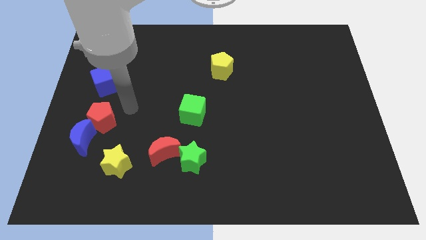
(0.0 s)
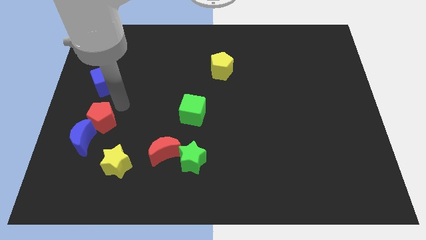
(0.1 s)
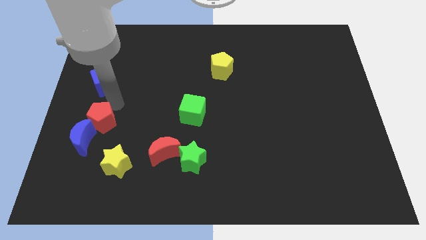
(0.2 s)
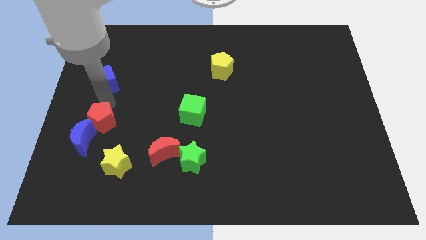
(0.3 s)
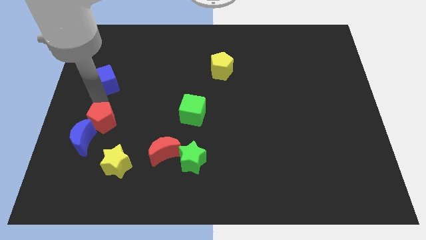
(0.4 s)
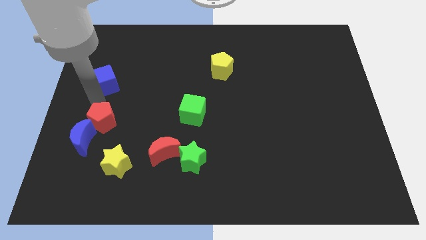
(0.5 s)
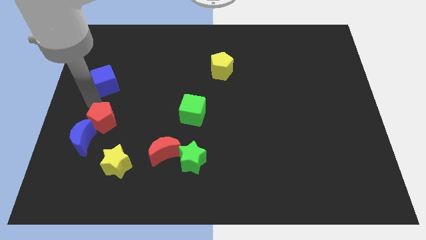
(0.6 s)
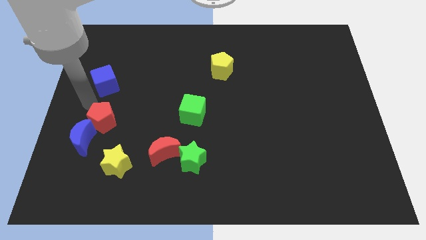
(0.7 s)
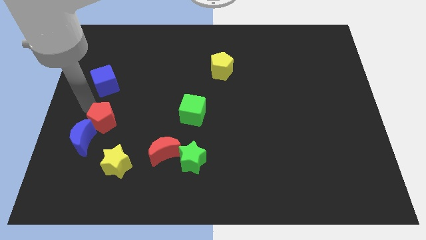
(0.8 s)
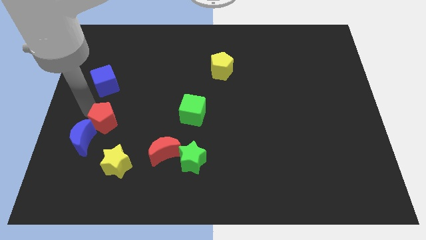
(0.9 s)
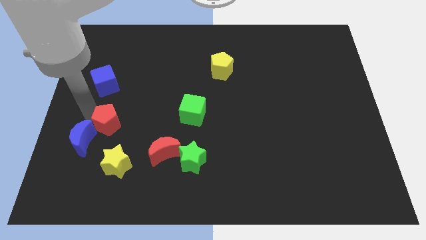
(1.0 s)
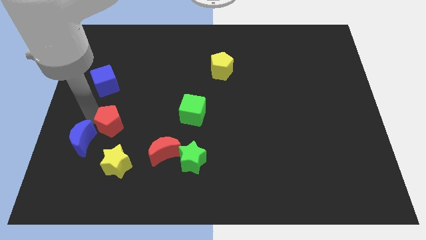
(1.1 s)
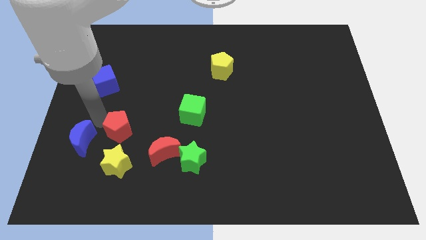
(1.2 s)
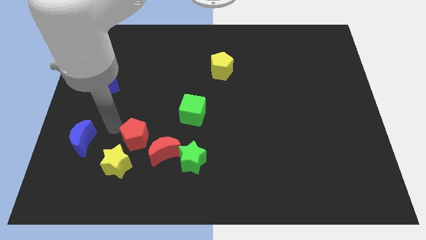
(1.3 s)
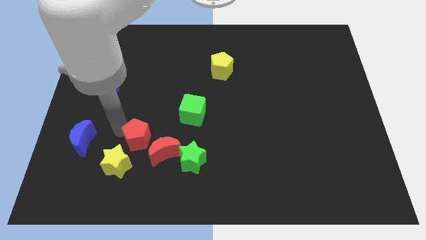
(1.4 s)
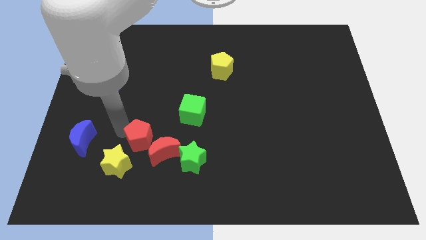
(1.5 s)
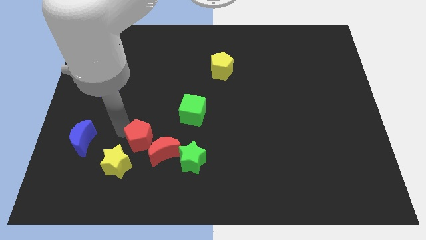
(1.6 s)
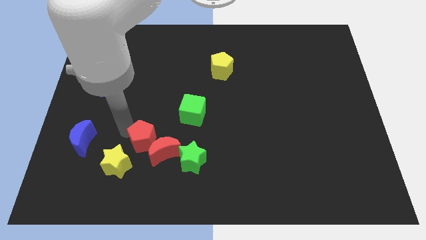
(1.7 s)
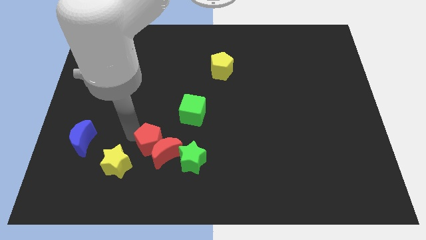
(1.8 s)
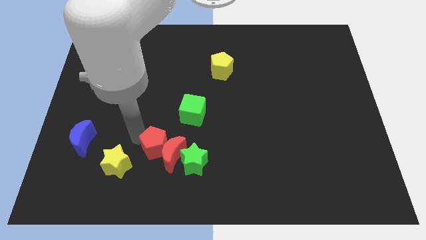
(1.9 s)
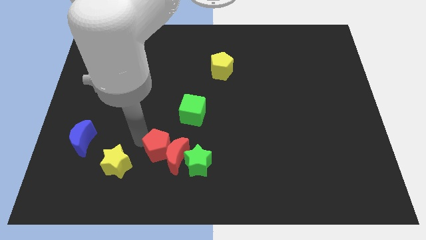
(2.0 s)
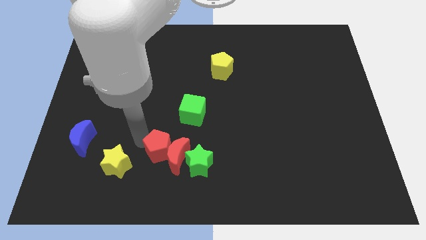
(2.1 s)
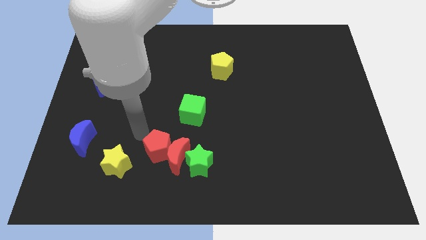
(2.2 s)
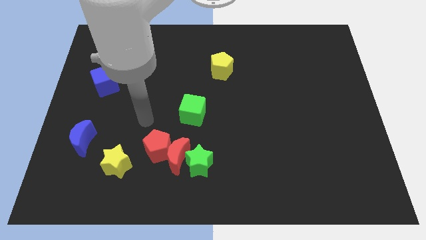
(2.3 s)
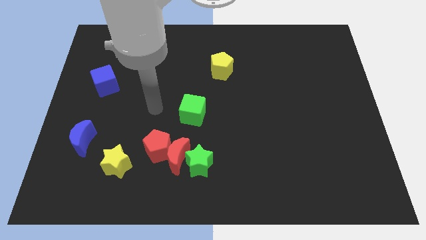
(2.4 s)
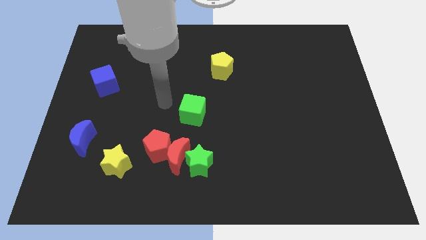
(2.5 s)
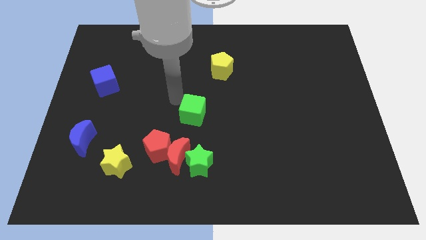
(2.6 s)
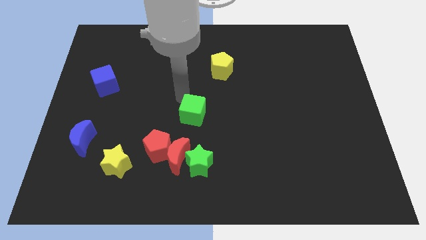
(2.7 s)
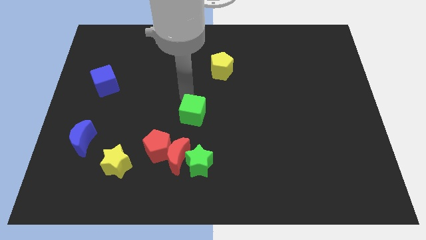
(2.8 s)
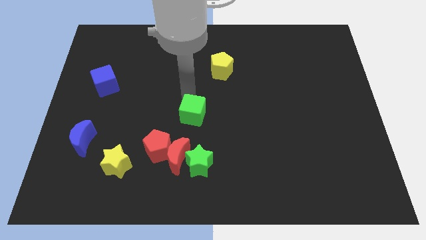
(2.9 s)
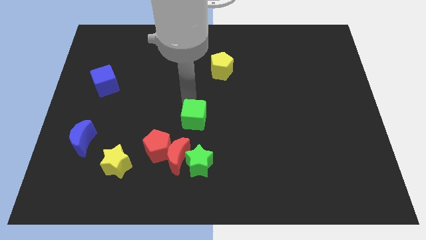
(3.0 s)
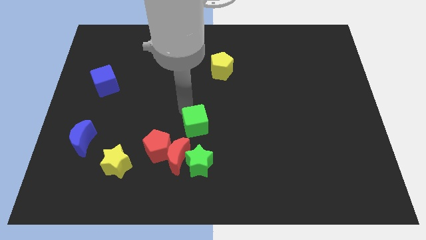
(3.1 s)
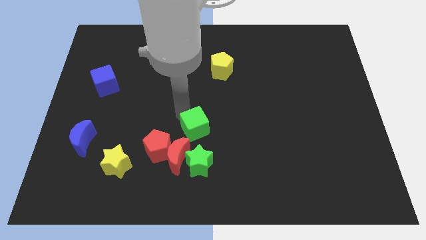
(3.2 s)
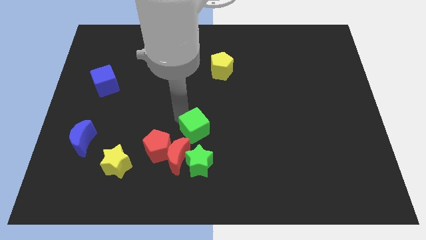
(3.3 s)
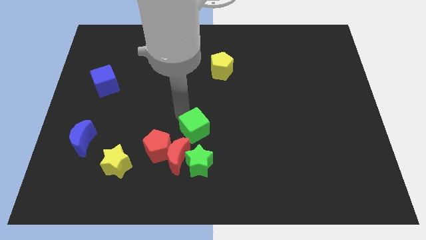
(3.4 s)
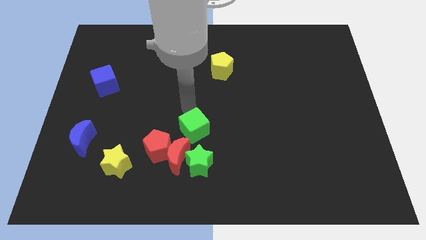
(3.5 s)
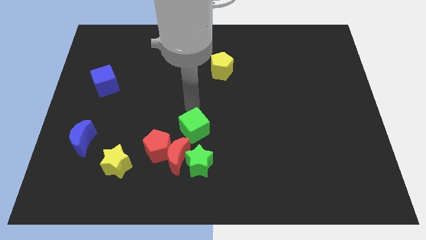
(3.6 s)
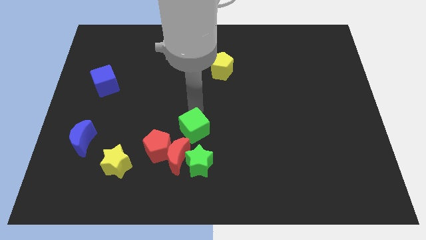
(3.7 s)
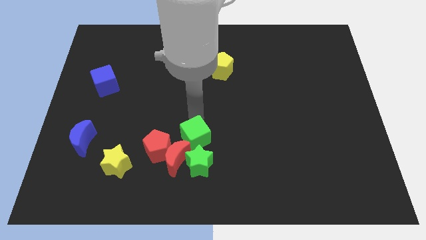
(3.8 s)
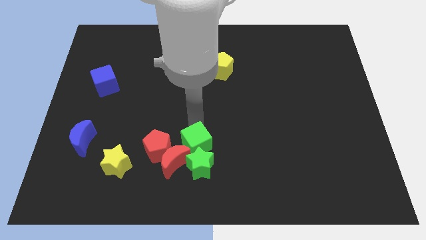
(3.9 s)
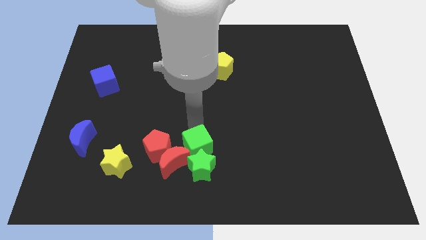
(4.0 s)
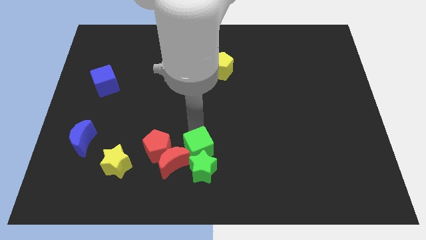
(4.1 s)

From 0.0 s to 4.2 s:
push green cube into green star

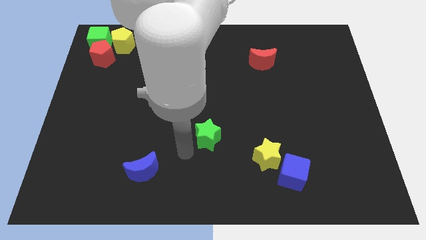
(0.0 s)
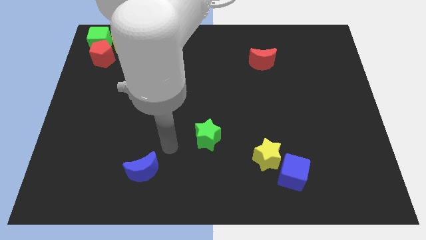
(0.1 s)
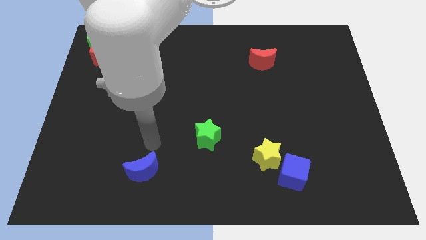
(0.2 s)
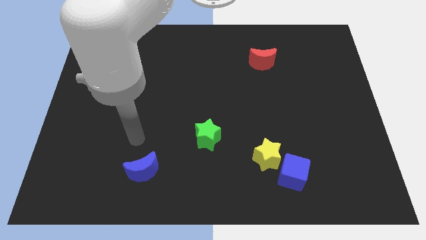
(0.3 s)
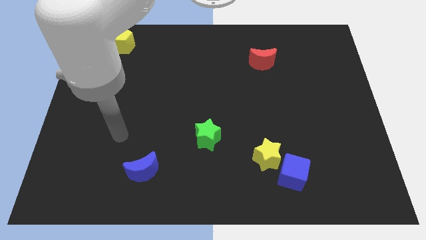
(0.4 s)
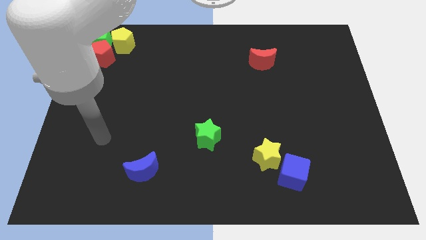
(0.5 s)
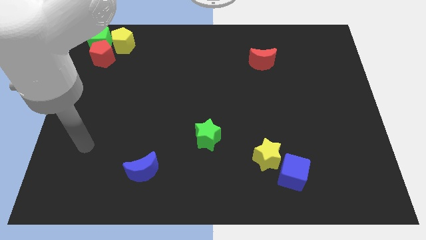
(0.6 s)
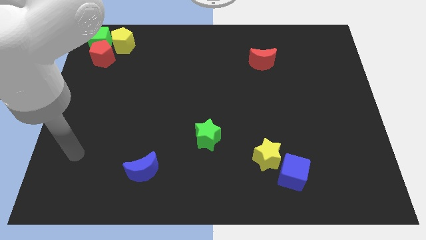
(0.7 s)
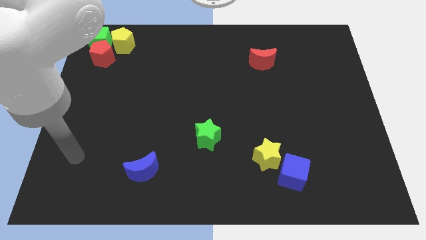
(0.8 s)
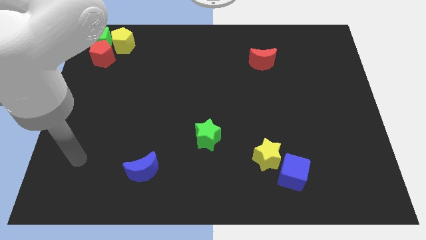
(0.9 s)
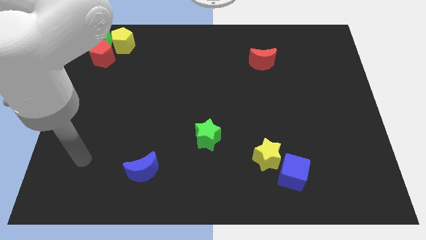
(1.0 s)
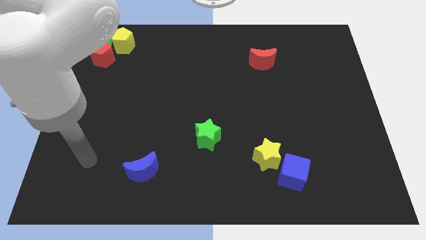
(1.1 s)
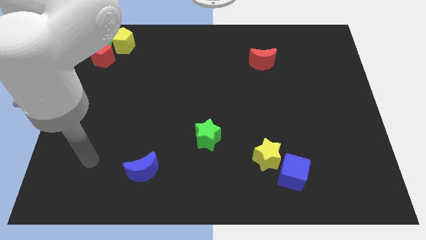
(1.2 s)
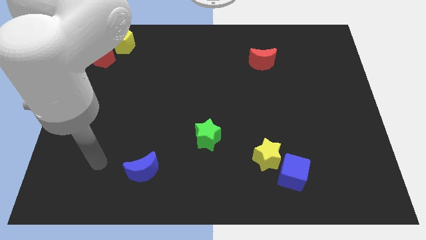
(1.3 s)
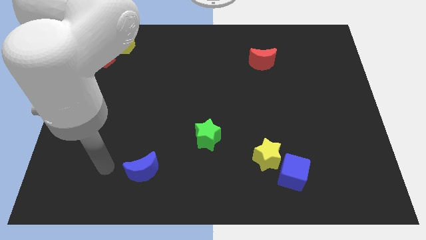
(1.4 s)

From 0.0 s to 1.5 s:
move your arm towards left to the blue crescent

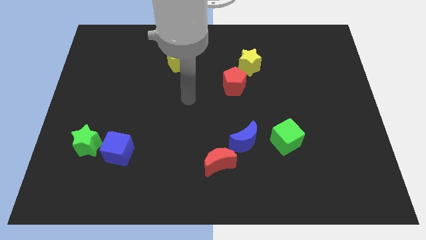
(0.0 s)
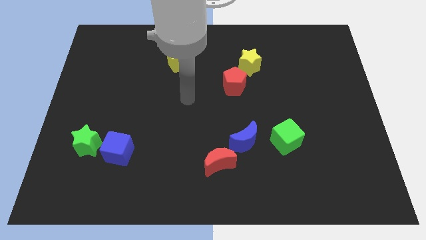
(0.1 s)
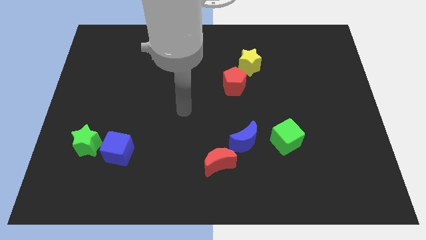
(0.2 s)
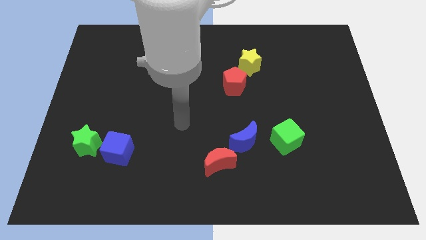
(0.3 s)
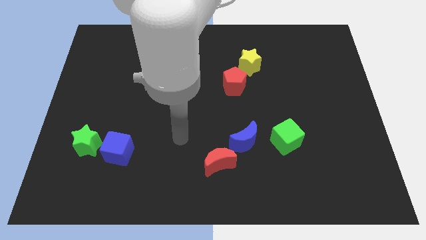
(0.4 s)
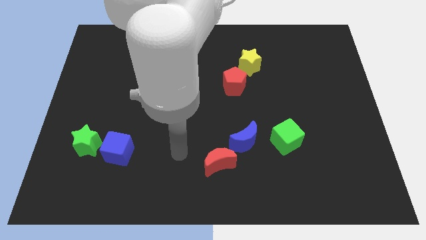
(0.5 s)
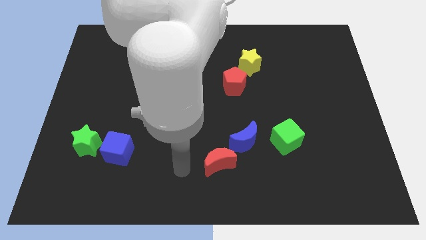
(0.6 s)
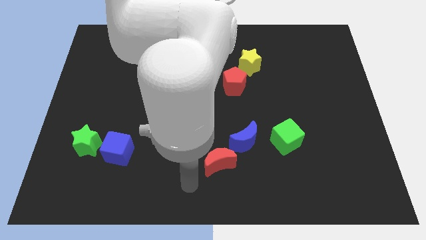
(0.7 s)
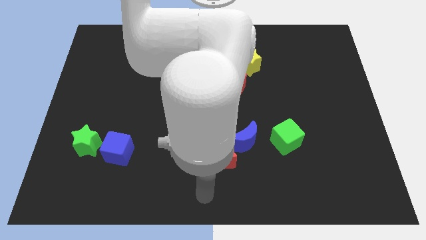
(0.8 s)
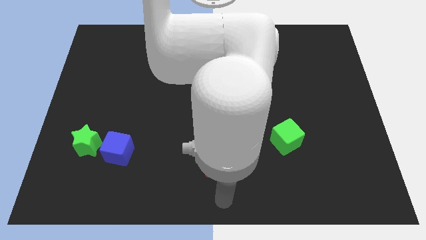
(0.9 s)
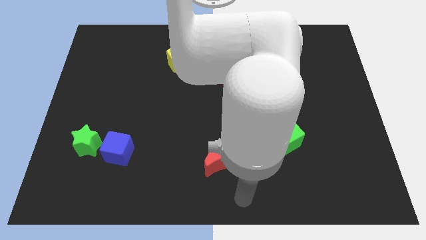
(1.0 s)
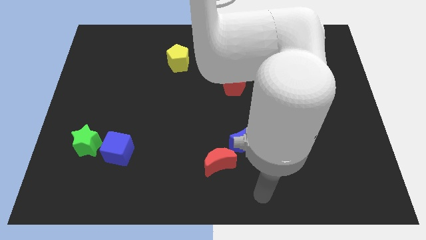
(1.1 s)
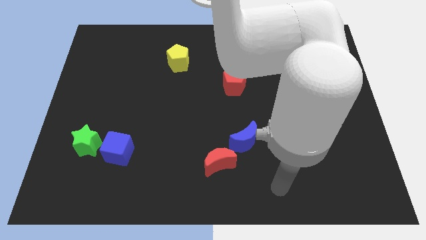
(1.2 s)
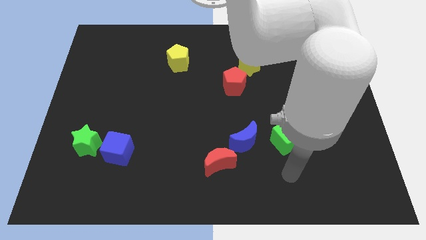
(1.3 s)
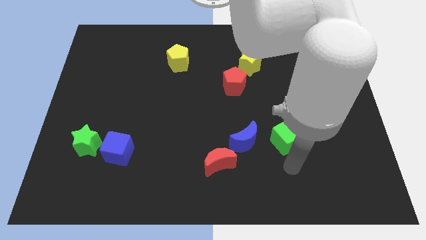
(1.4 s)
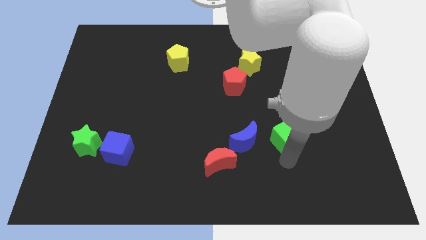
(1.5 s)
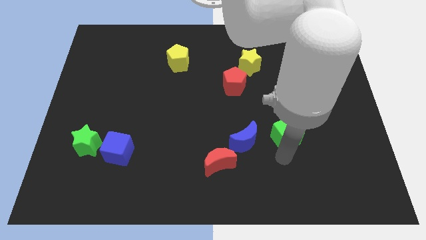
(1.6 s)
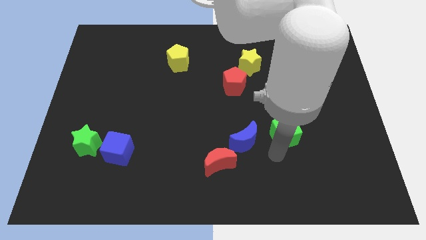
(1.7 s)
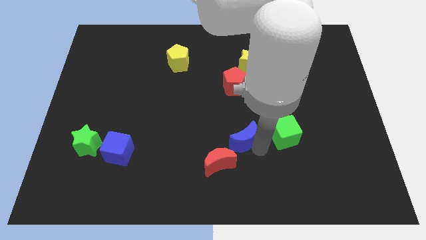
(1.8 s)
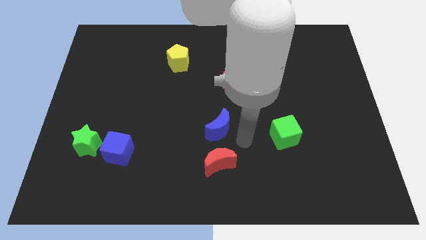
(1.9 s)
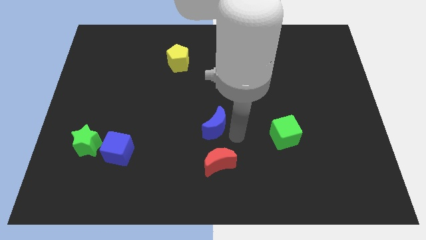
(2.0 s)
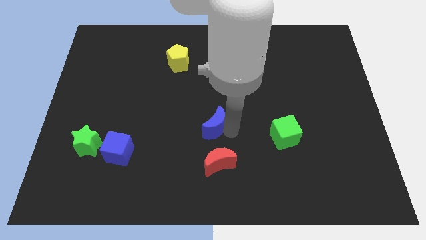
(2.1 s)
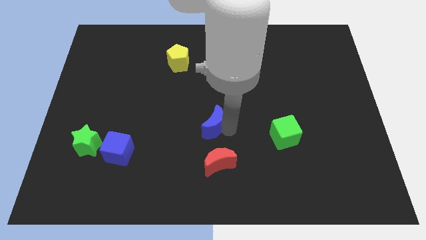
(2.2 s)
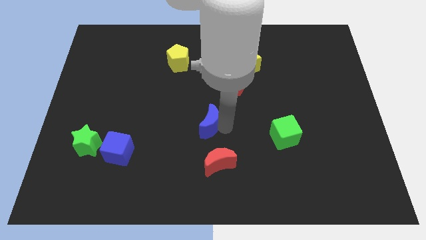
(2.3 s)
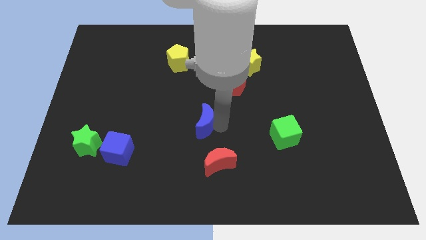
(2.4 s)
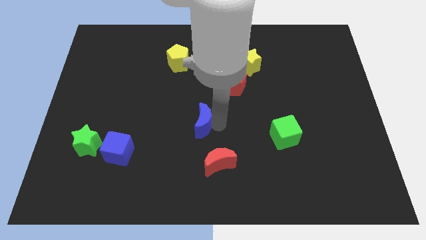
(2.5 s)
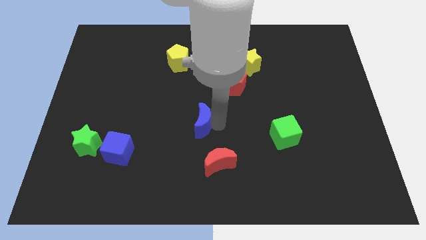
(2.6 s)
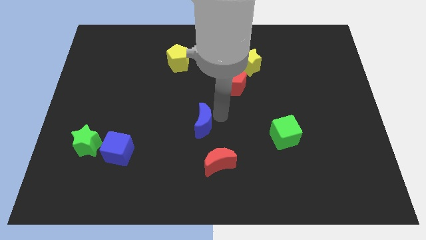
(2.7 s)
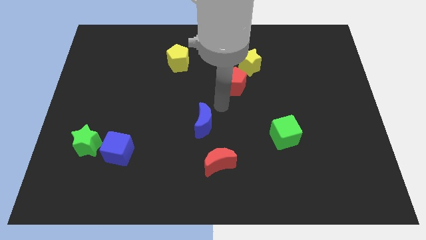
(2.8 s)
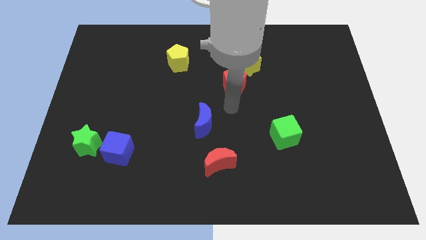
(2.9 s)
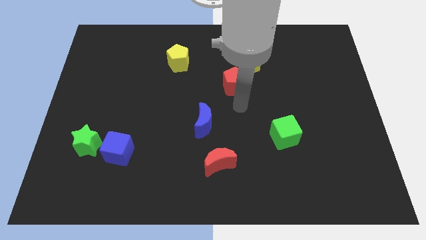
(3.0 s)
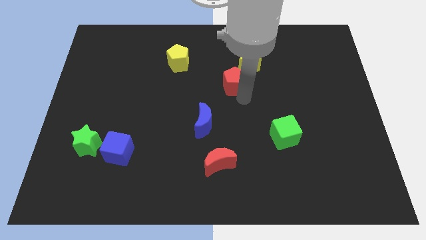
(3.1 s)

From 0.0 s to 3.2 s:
move blue crescent to the center of the board
